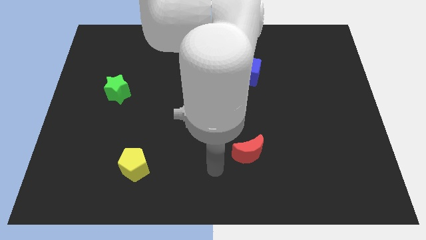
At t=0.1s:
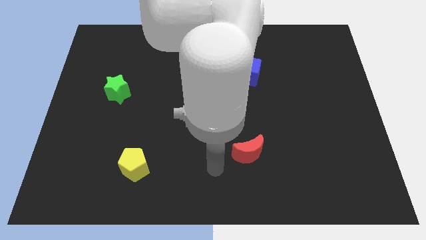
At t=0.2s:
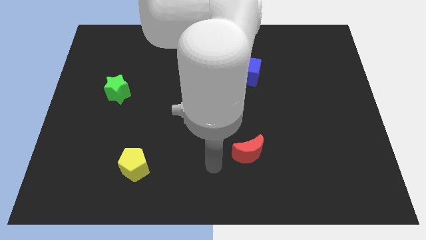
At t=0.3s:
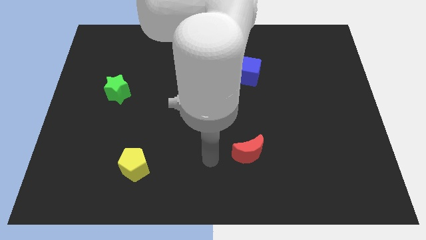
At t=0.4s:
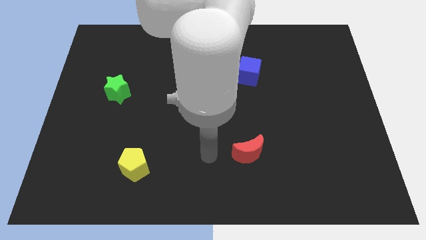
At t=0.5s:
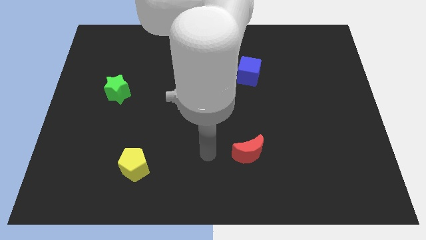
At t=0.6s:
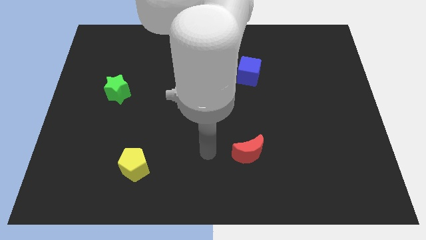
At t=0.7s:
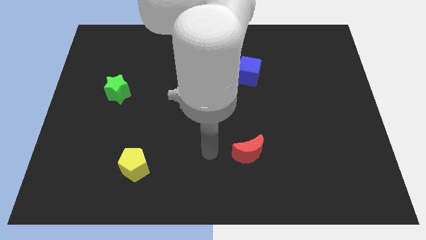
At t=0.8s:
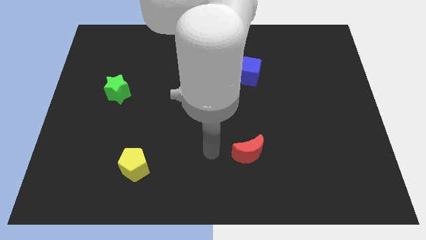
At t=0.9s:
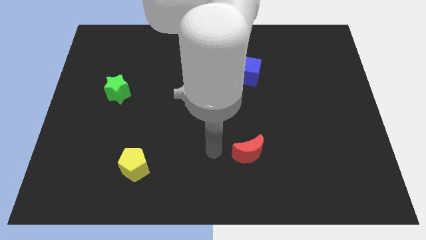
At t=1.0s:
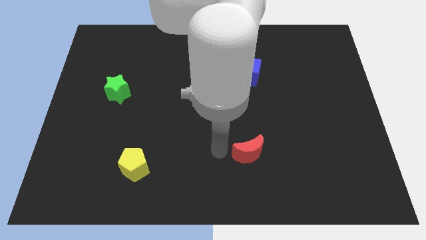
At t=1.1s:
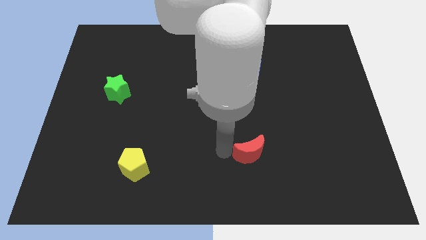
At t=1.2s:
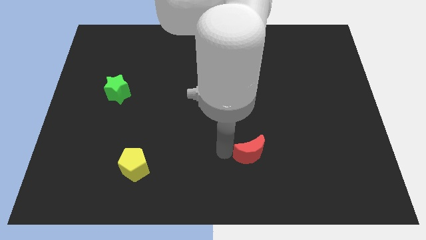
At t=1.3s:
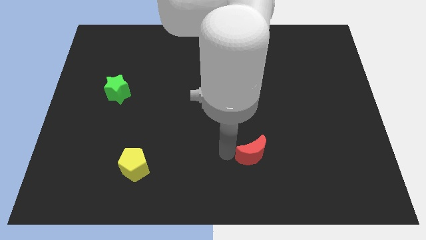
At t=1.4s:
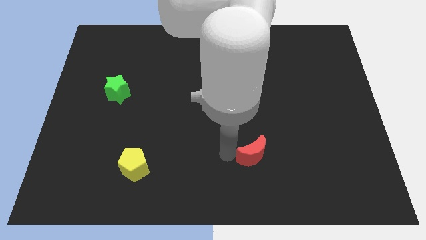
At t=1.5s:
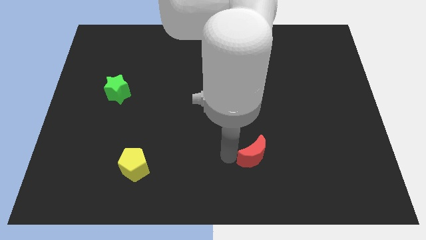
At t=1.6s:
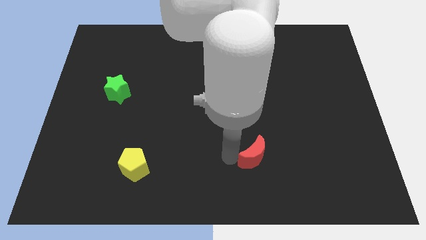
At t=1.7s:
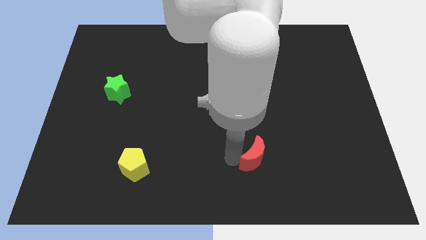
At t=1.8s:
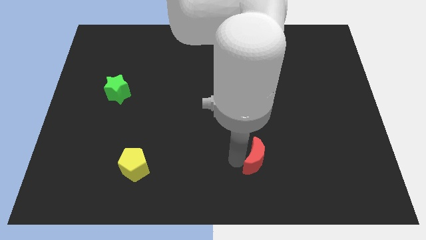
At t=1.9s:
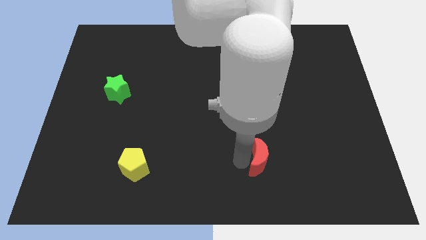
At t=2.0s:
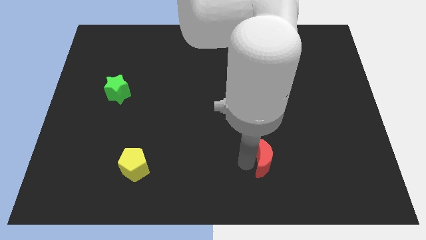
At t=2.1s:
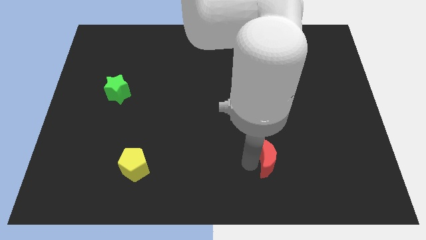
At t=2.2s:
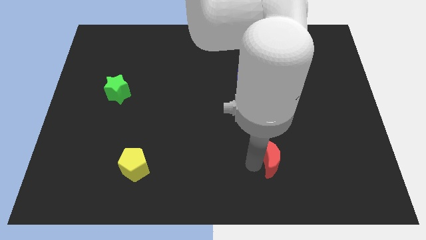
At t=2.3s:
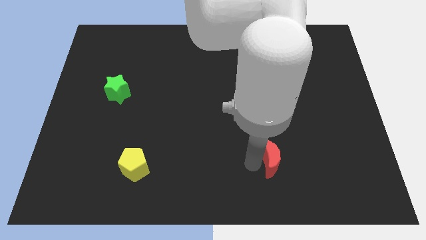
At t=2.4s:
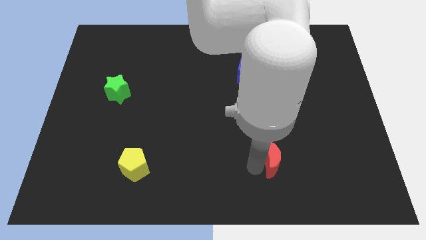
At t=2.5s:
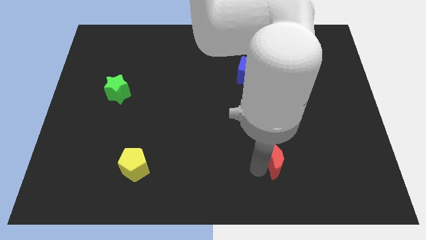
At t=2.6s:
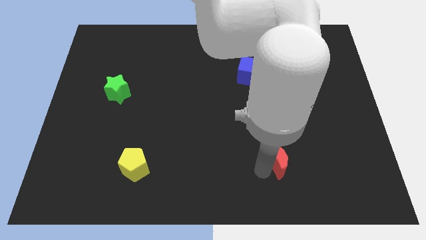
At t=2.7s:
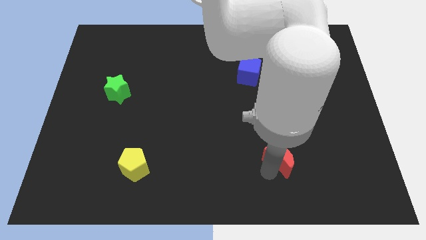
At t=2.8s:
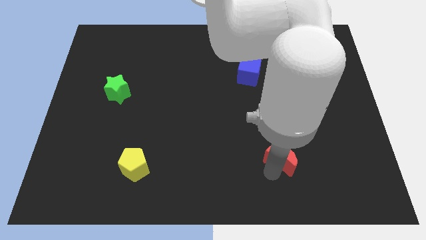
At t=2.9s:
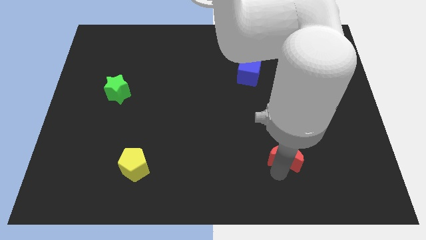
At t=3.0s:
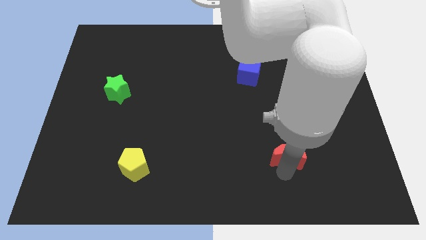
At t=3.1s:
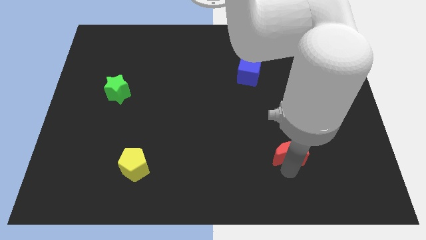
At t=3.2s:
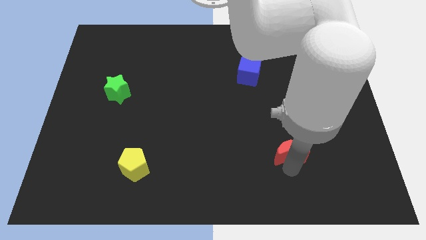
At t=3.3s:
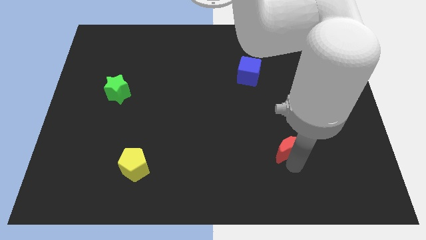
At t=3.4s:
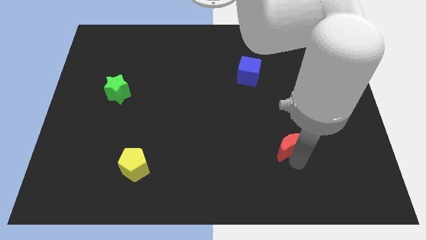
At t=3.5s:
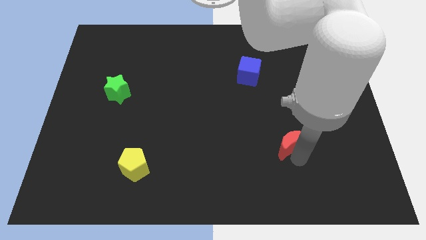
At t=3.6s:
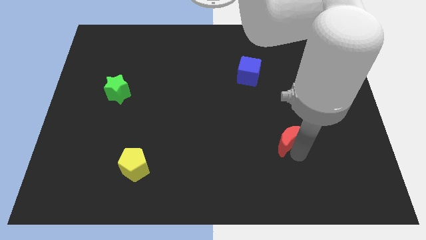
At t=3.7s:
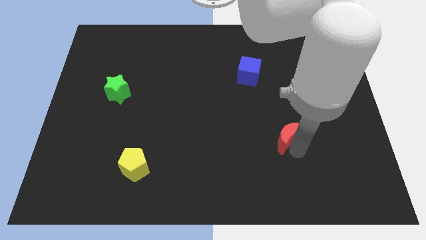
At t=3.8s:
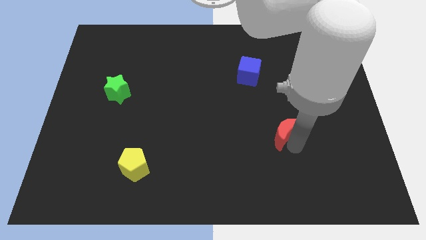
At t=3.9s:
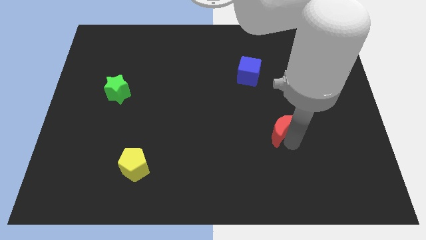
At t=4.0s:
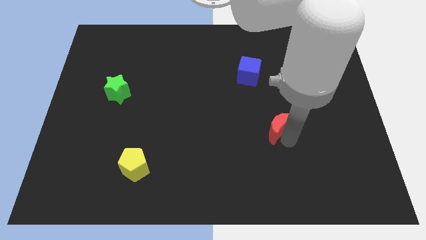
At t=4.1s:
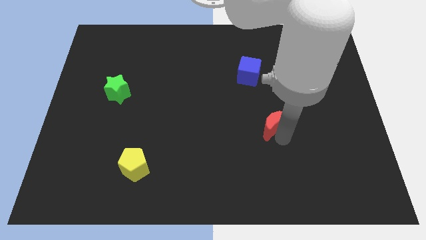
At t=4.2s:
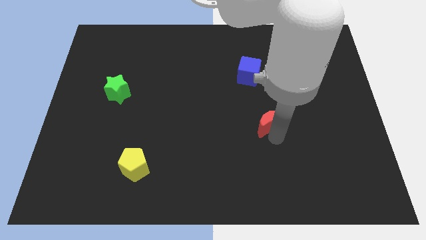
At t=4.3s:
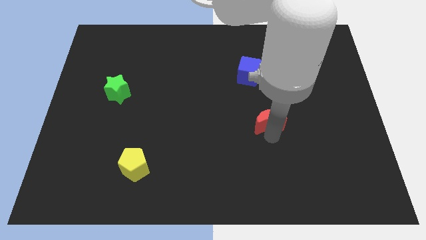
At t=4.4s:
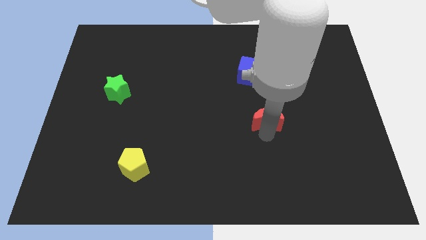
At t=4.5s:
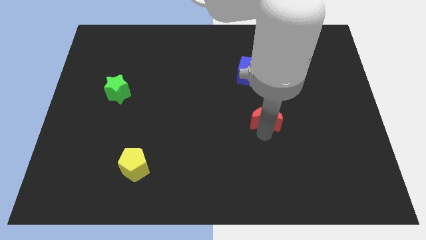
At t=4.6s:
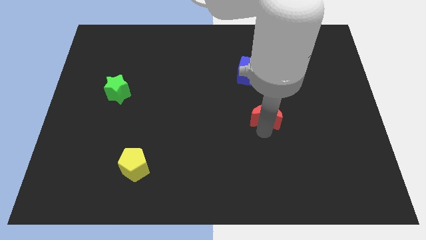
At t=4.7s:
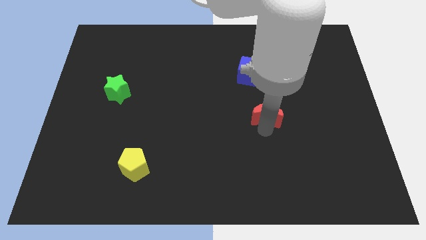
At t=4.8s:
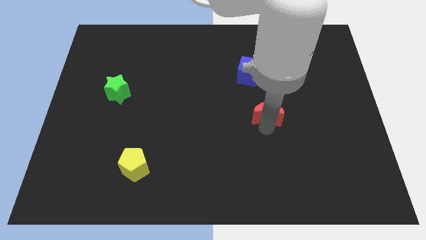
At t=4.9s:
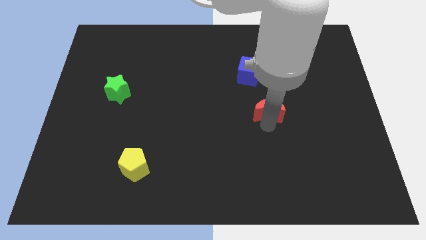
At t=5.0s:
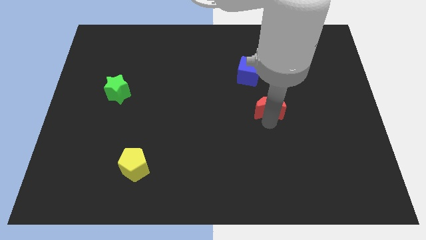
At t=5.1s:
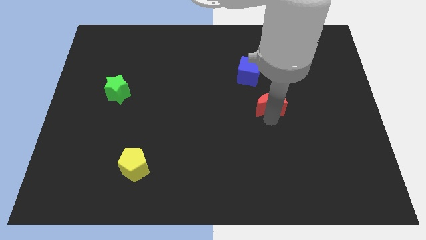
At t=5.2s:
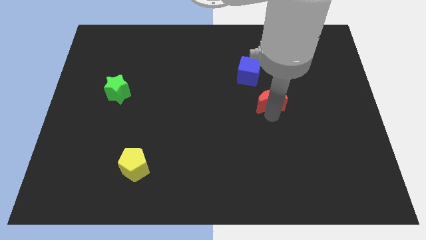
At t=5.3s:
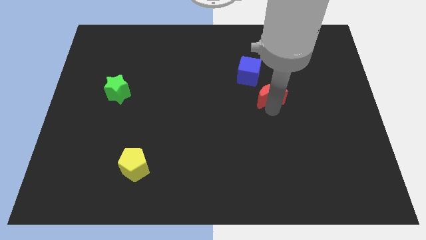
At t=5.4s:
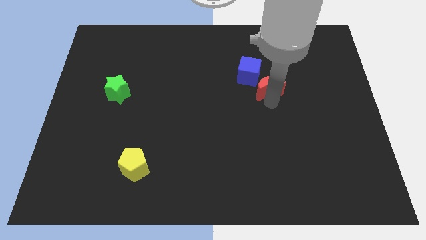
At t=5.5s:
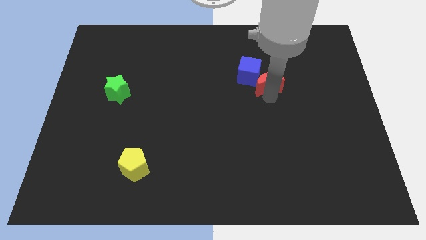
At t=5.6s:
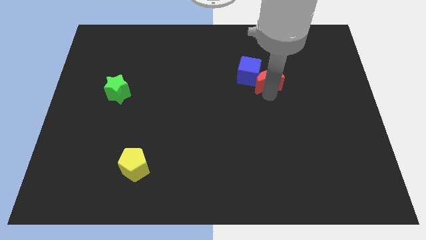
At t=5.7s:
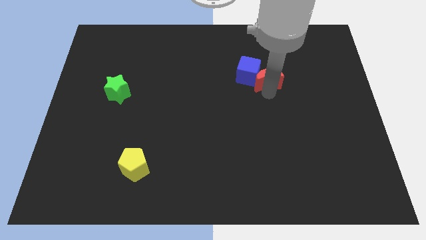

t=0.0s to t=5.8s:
put the red block to the cube

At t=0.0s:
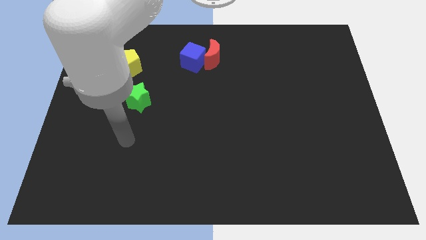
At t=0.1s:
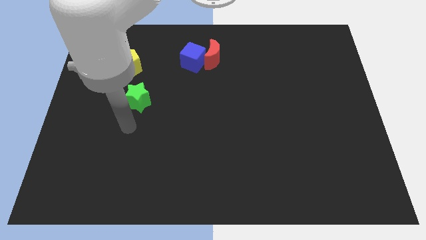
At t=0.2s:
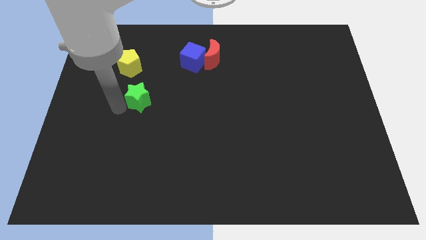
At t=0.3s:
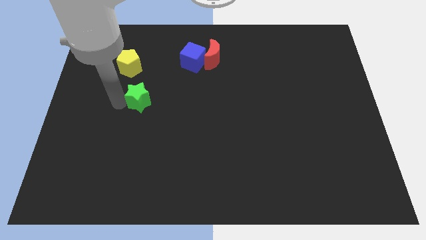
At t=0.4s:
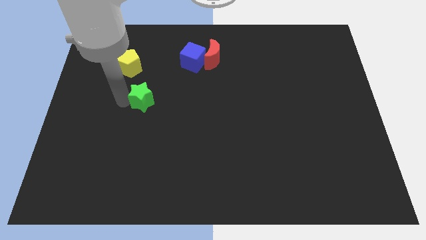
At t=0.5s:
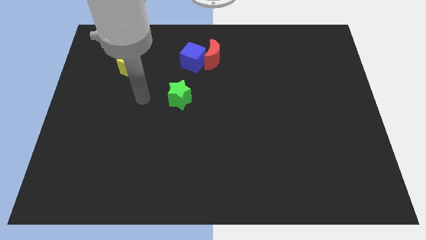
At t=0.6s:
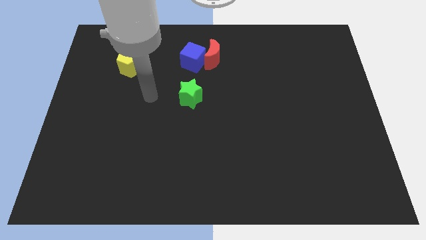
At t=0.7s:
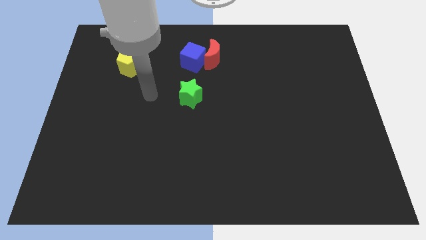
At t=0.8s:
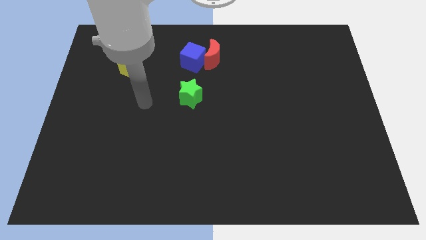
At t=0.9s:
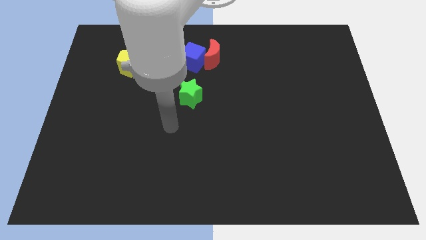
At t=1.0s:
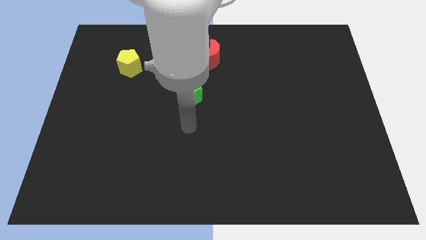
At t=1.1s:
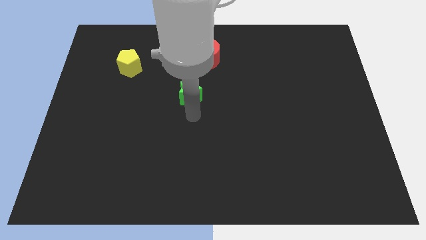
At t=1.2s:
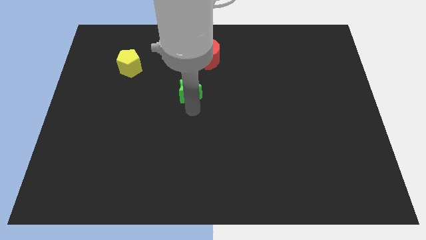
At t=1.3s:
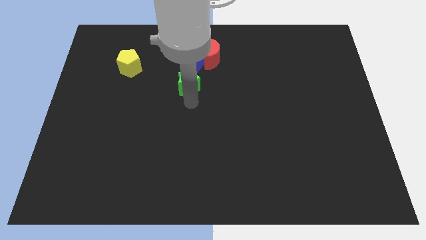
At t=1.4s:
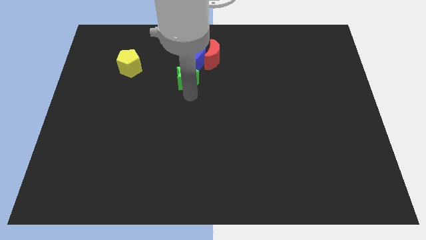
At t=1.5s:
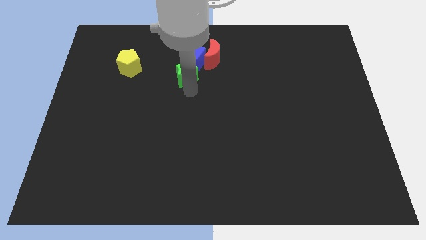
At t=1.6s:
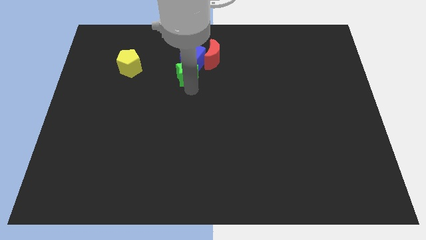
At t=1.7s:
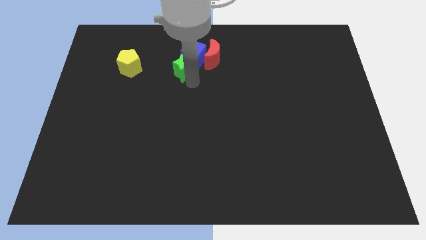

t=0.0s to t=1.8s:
push the green block next to the cube

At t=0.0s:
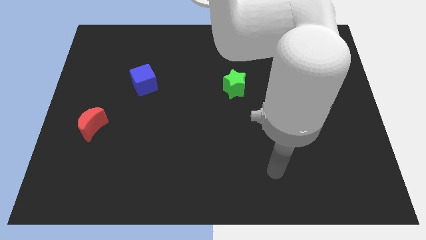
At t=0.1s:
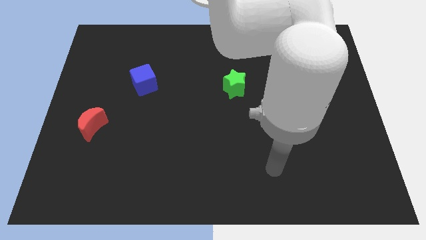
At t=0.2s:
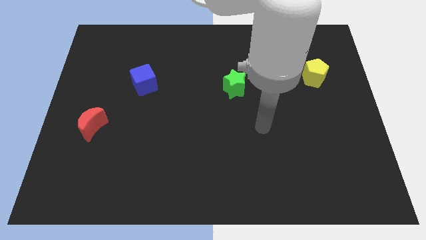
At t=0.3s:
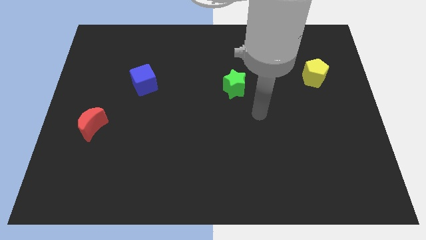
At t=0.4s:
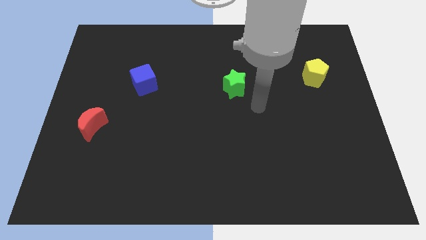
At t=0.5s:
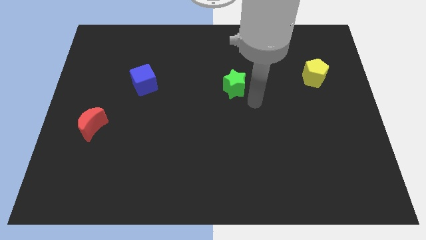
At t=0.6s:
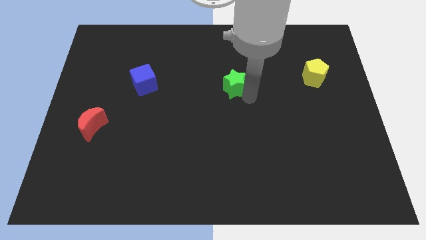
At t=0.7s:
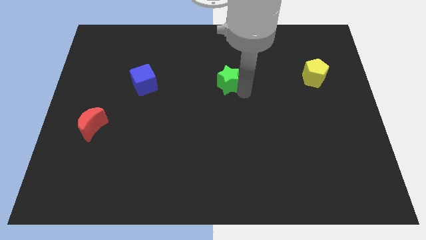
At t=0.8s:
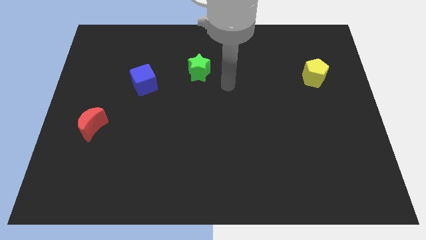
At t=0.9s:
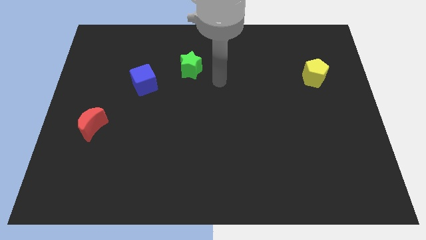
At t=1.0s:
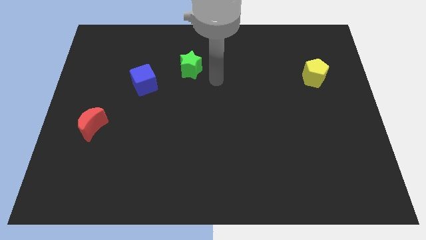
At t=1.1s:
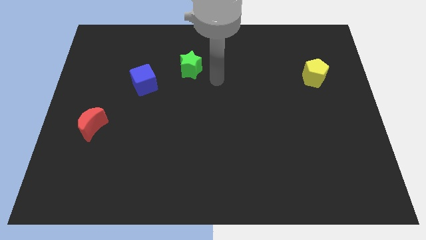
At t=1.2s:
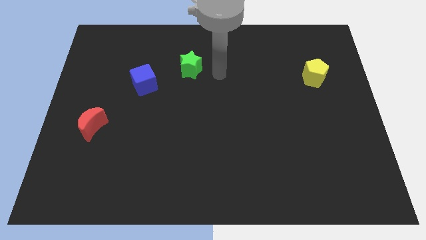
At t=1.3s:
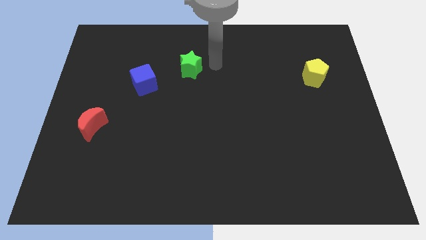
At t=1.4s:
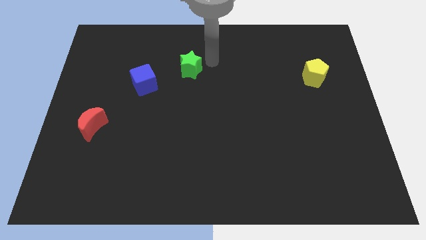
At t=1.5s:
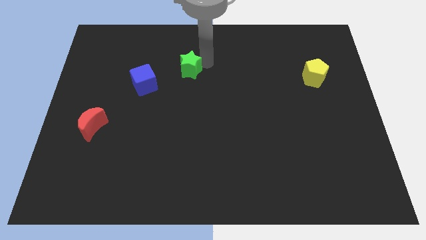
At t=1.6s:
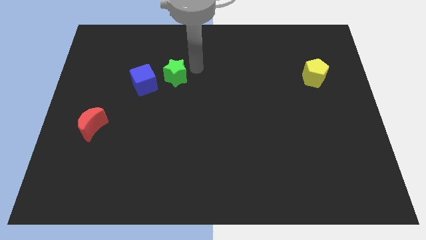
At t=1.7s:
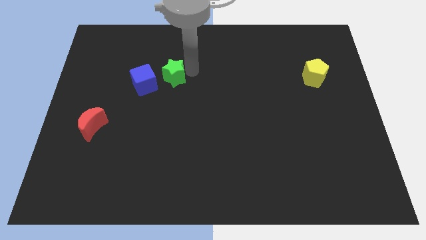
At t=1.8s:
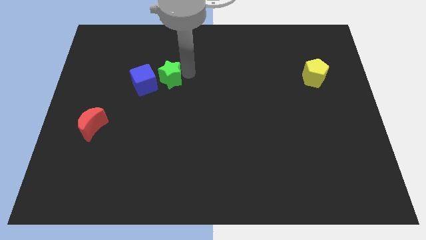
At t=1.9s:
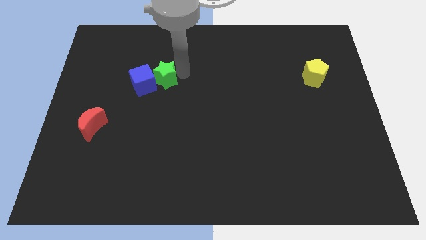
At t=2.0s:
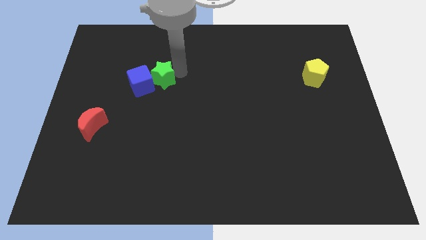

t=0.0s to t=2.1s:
move the star towards the blue block
